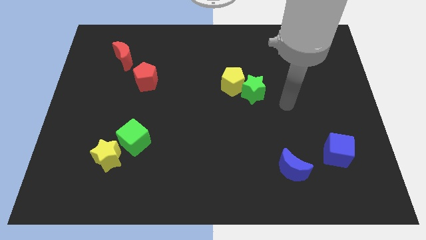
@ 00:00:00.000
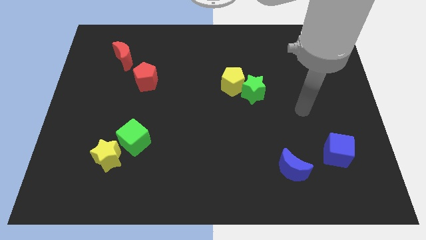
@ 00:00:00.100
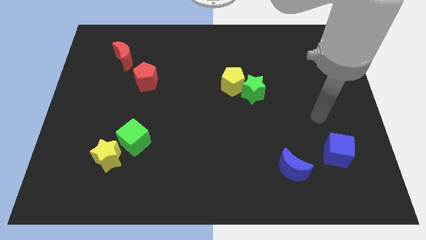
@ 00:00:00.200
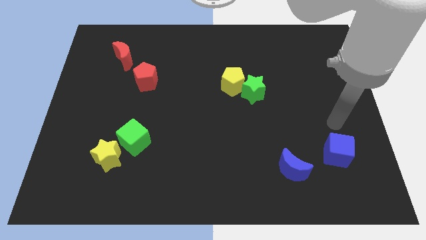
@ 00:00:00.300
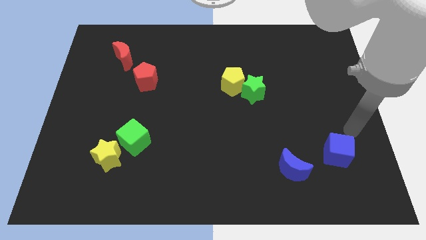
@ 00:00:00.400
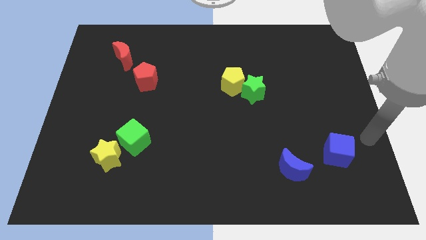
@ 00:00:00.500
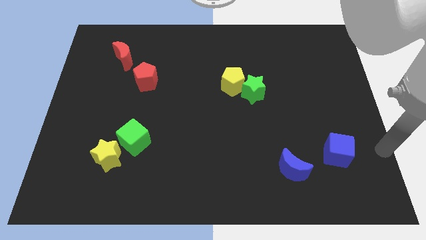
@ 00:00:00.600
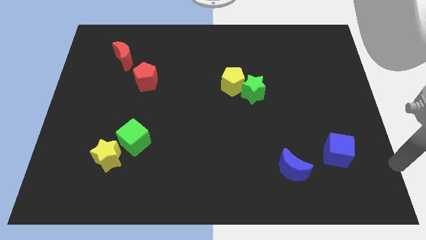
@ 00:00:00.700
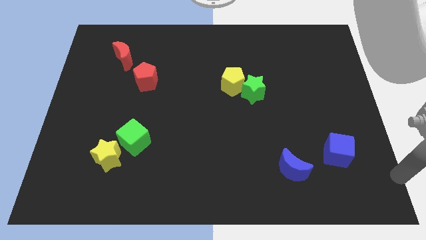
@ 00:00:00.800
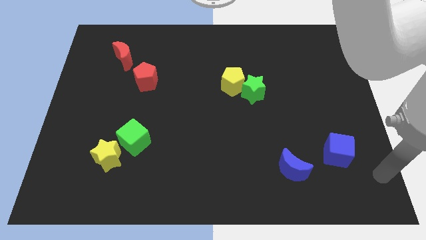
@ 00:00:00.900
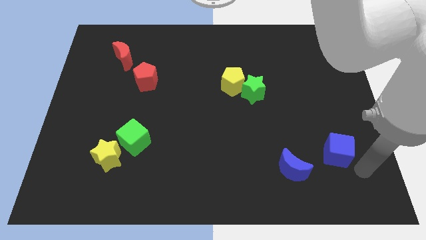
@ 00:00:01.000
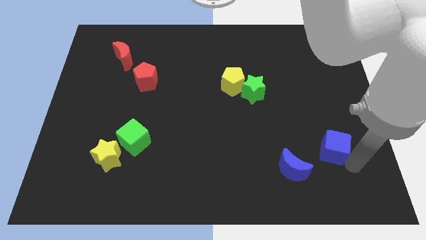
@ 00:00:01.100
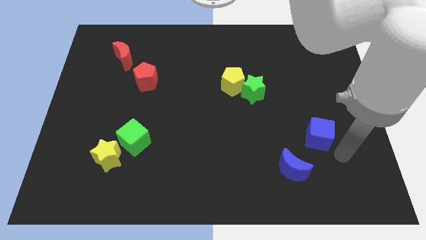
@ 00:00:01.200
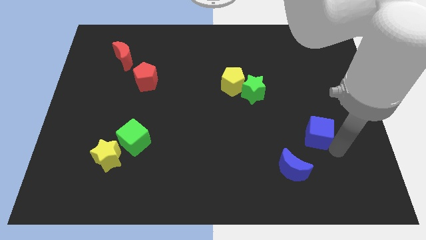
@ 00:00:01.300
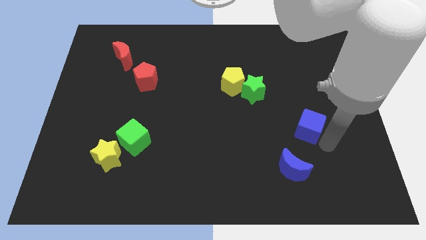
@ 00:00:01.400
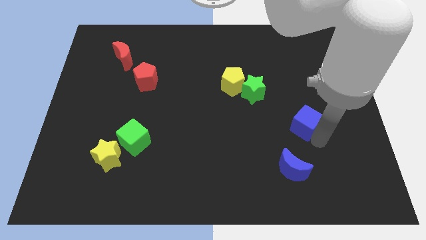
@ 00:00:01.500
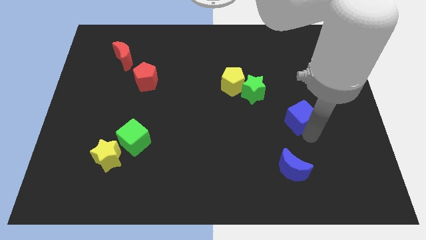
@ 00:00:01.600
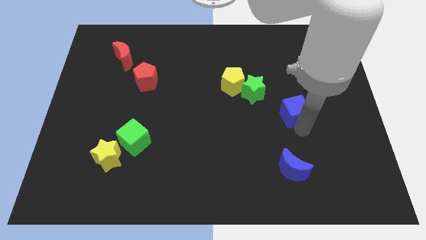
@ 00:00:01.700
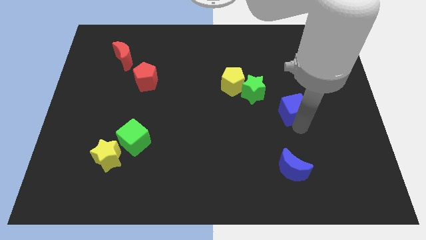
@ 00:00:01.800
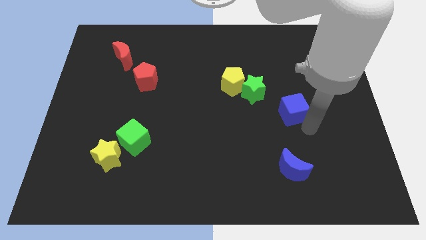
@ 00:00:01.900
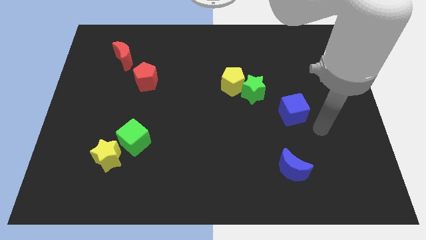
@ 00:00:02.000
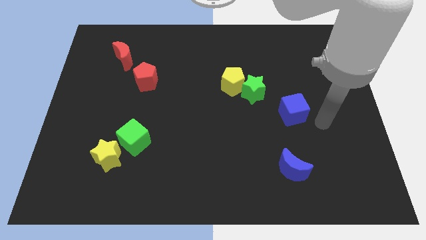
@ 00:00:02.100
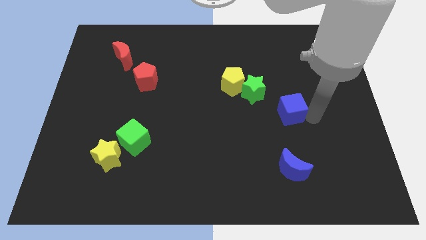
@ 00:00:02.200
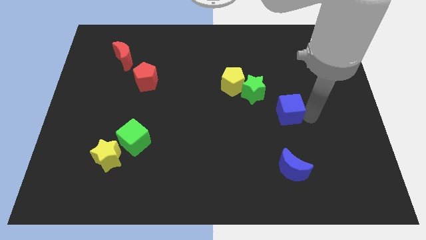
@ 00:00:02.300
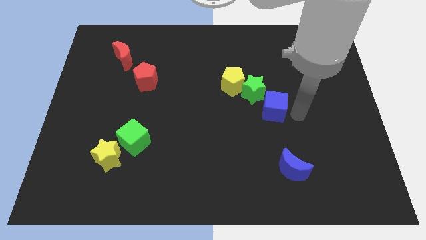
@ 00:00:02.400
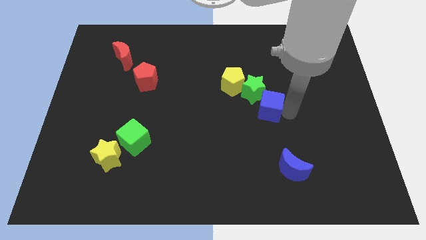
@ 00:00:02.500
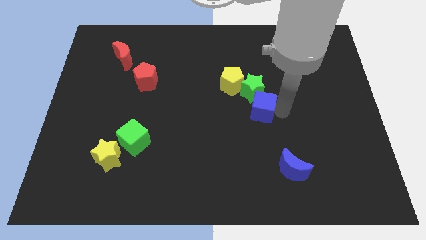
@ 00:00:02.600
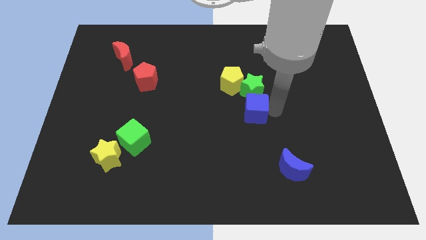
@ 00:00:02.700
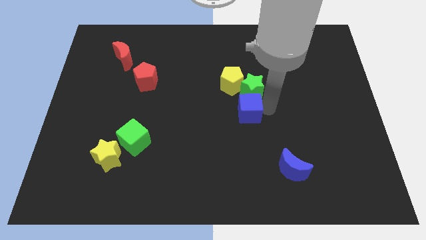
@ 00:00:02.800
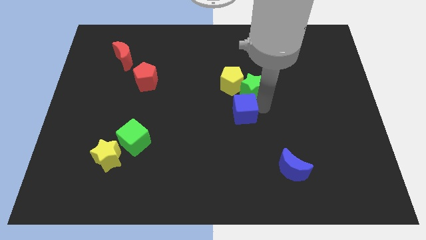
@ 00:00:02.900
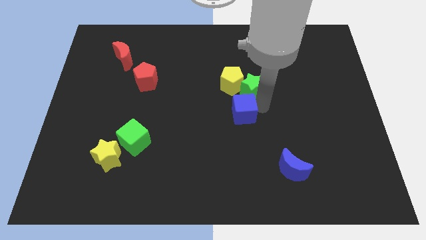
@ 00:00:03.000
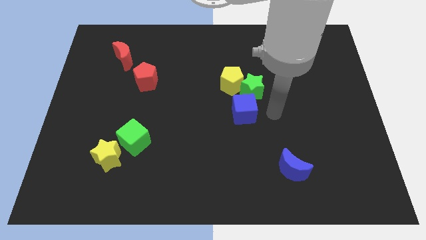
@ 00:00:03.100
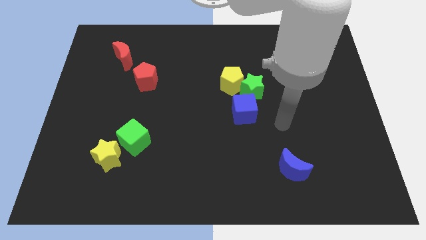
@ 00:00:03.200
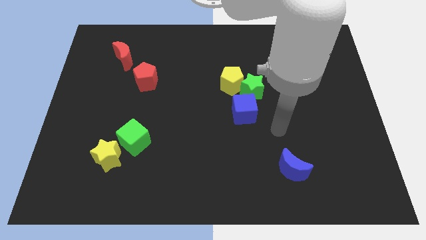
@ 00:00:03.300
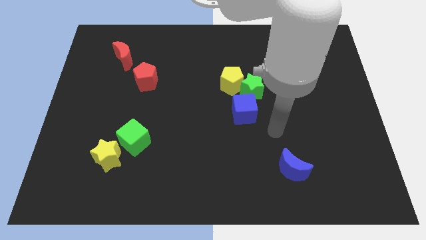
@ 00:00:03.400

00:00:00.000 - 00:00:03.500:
place the blue cube at the bottom side of the green star

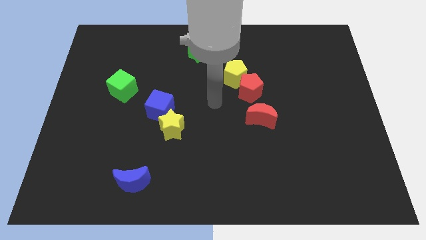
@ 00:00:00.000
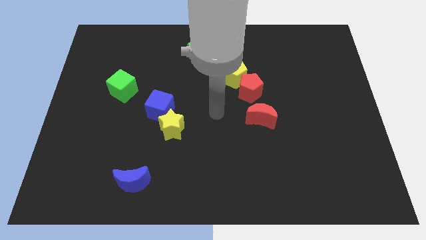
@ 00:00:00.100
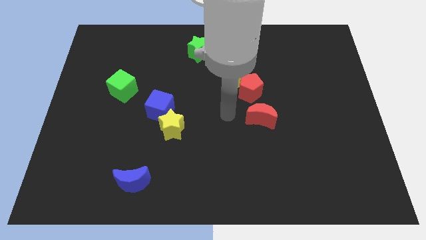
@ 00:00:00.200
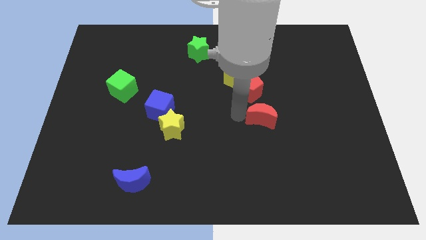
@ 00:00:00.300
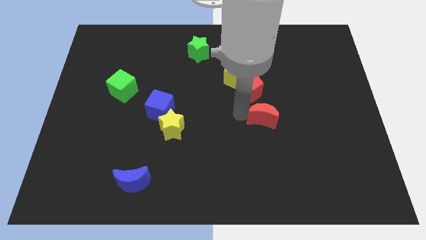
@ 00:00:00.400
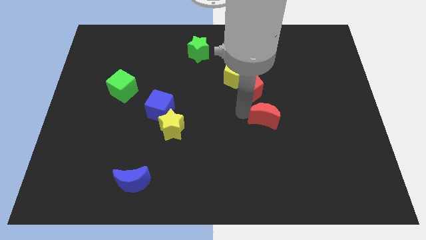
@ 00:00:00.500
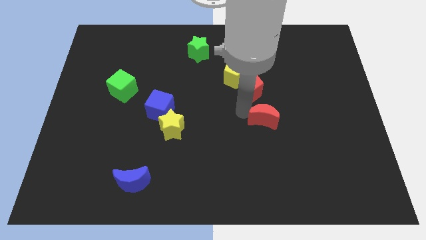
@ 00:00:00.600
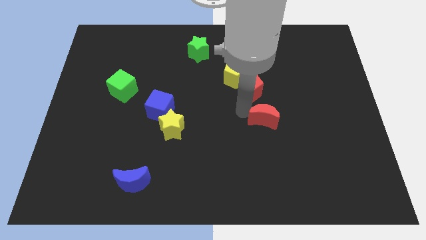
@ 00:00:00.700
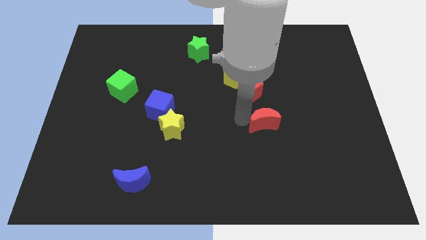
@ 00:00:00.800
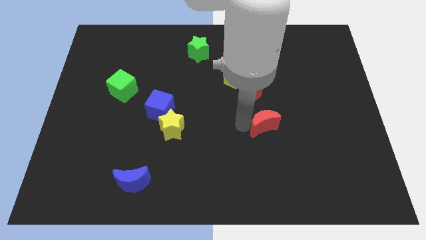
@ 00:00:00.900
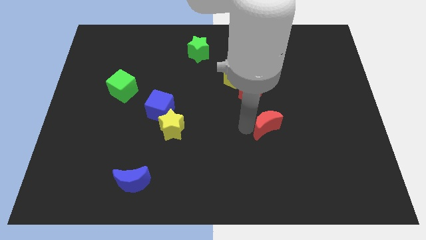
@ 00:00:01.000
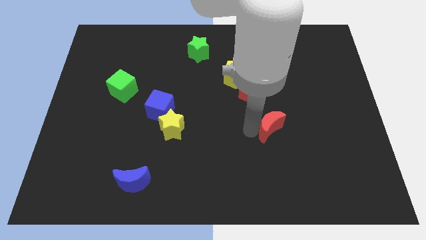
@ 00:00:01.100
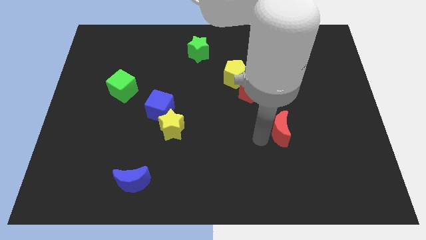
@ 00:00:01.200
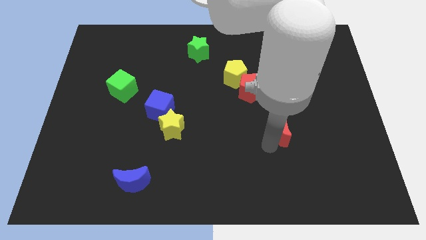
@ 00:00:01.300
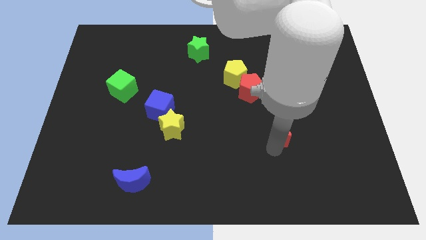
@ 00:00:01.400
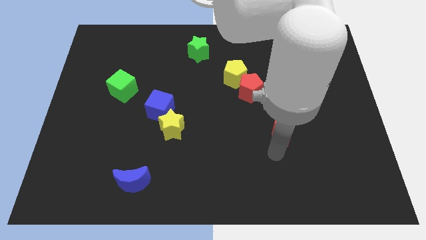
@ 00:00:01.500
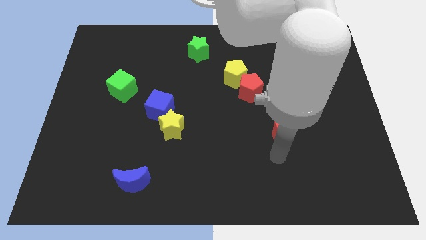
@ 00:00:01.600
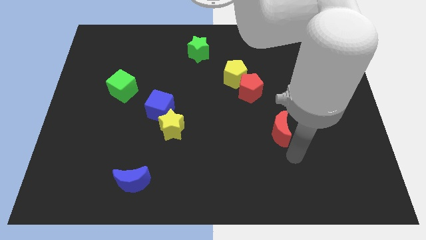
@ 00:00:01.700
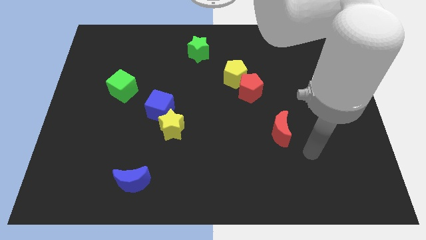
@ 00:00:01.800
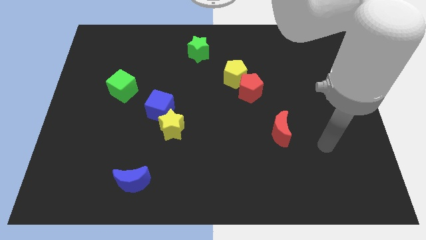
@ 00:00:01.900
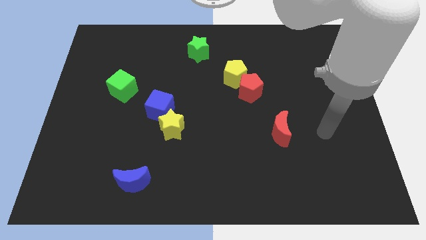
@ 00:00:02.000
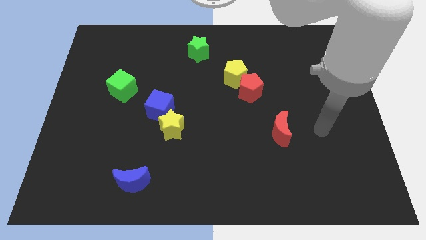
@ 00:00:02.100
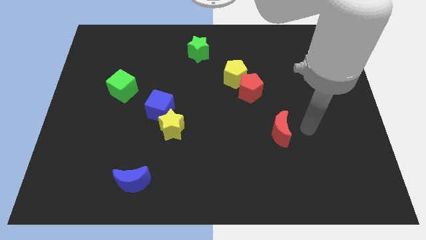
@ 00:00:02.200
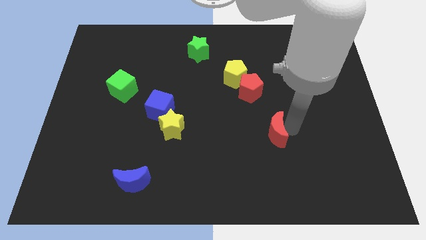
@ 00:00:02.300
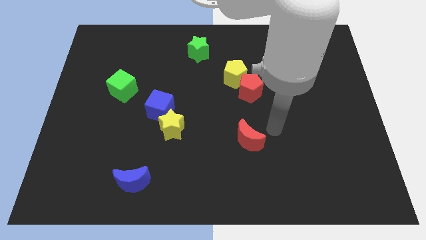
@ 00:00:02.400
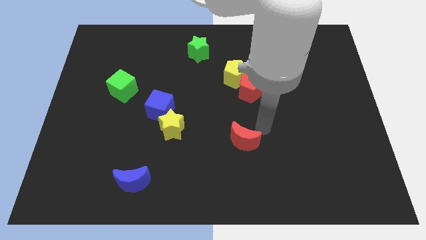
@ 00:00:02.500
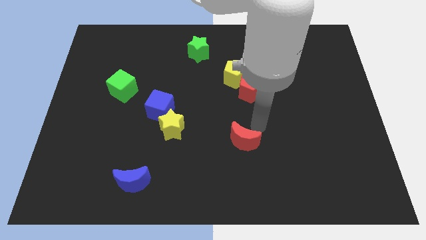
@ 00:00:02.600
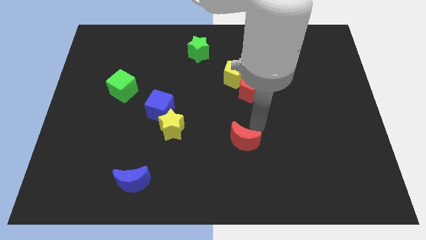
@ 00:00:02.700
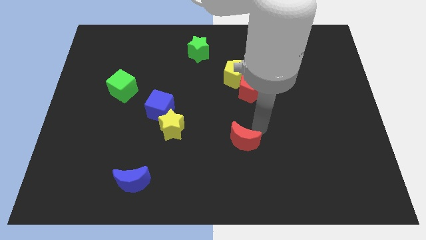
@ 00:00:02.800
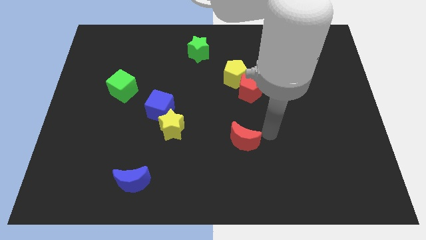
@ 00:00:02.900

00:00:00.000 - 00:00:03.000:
move the red moon down to the red pentagon

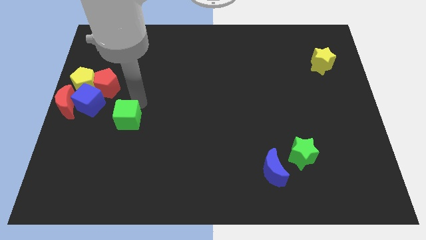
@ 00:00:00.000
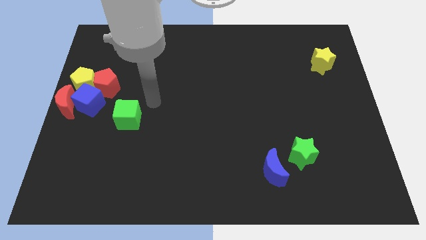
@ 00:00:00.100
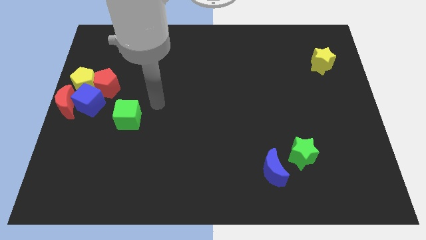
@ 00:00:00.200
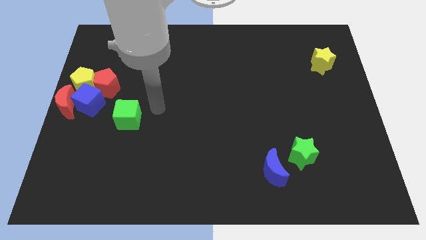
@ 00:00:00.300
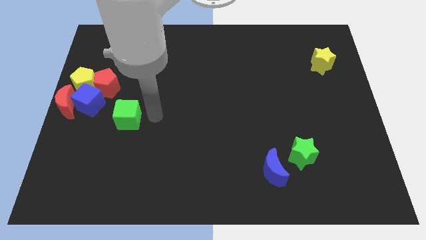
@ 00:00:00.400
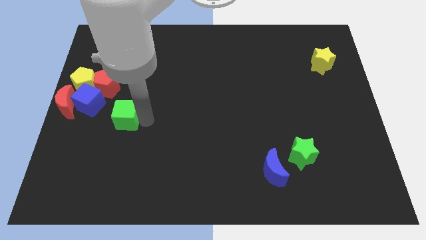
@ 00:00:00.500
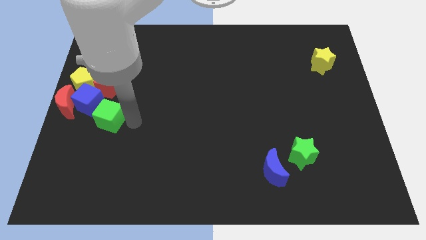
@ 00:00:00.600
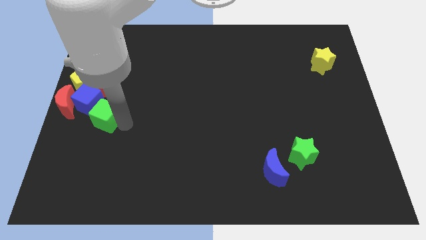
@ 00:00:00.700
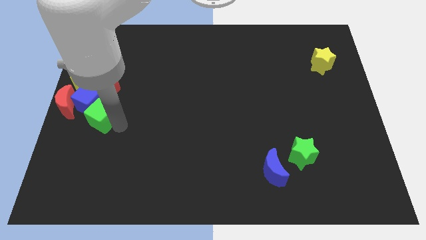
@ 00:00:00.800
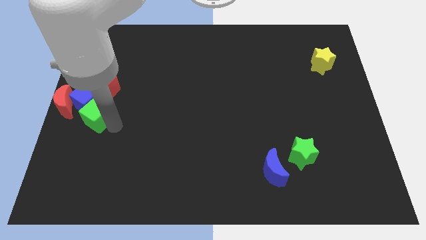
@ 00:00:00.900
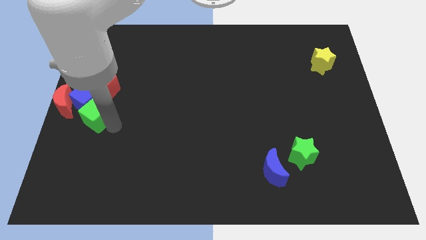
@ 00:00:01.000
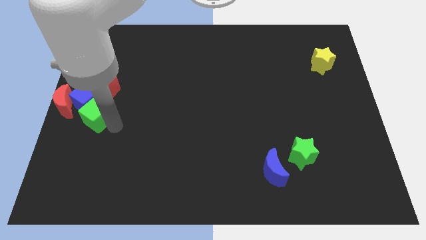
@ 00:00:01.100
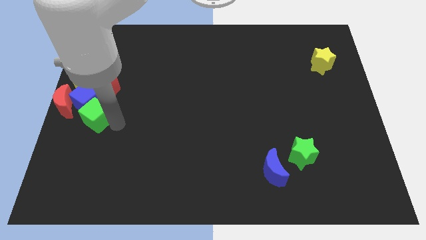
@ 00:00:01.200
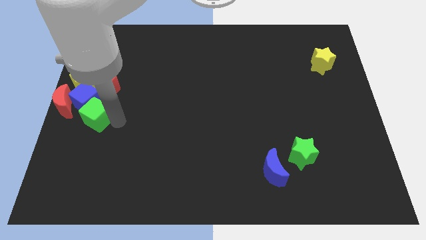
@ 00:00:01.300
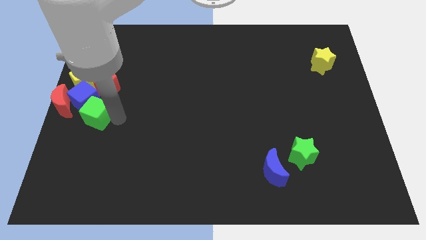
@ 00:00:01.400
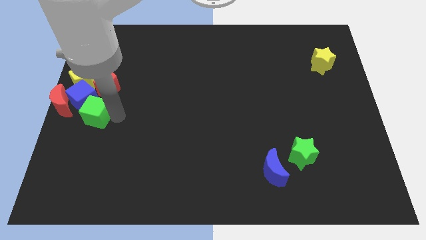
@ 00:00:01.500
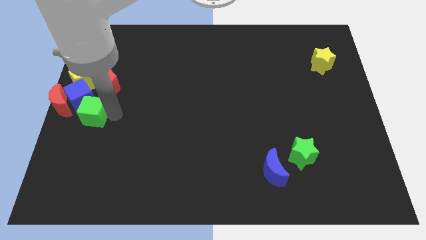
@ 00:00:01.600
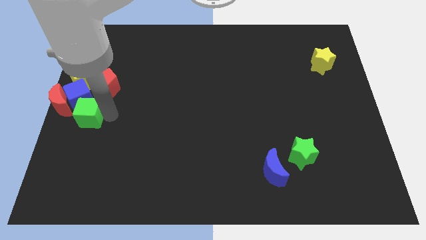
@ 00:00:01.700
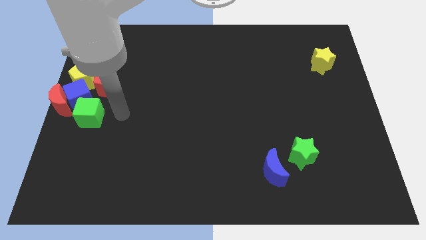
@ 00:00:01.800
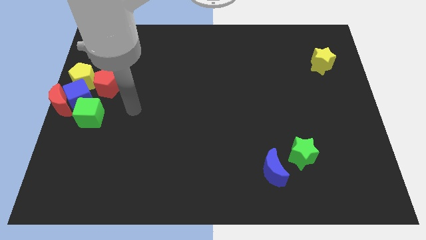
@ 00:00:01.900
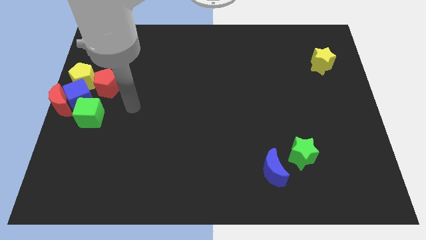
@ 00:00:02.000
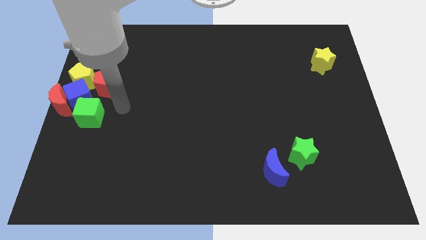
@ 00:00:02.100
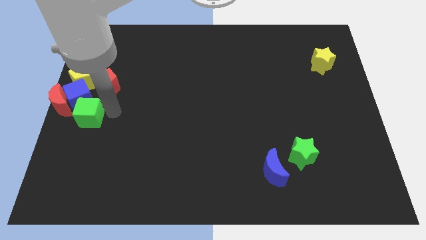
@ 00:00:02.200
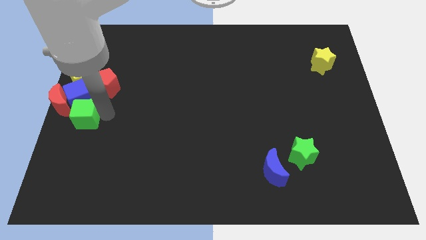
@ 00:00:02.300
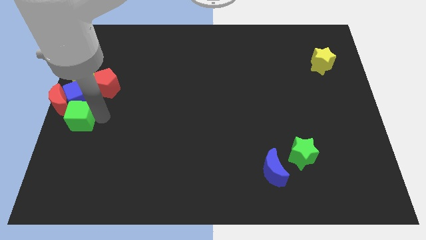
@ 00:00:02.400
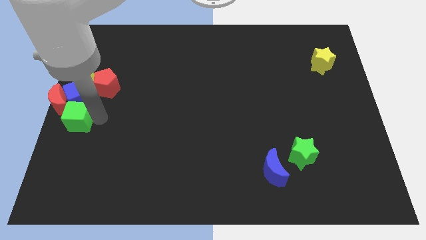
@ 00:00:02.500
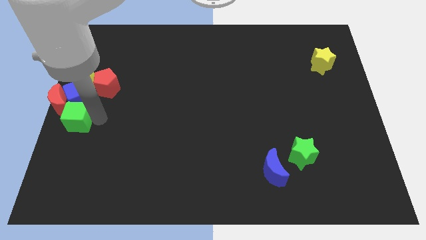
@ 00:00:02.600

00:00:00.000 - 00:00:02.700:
place the green cube at the bottom of blue cube
